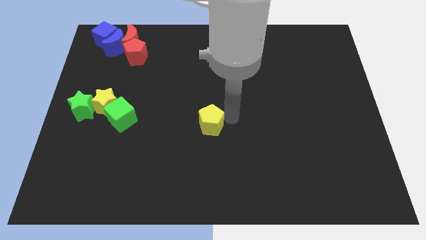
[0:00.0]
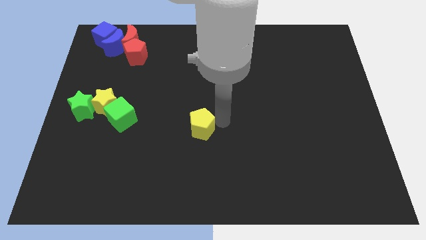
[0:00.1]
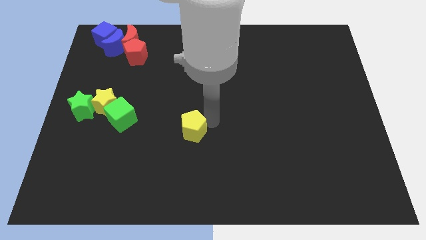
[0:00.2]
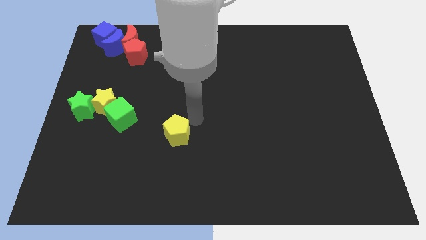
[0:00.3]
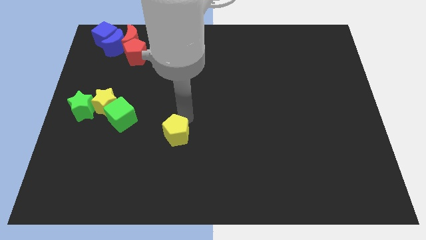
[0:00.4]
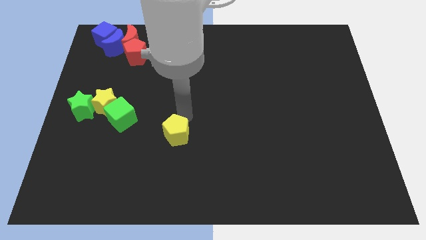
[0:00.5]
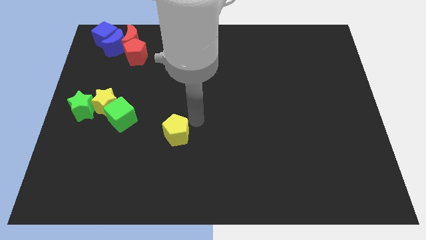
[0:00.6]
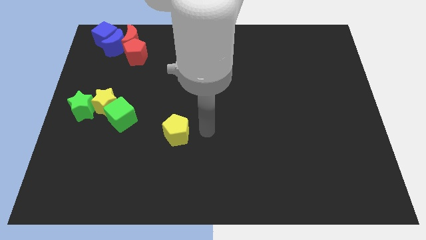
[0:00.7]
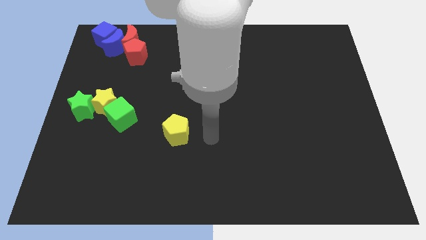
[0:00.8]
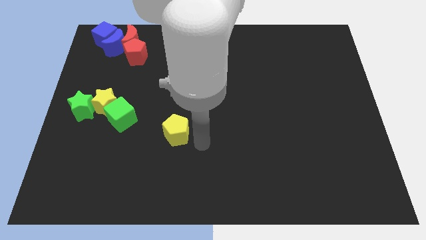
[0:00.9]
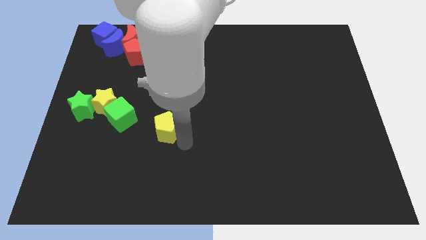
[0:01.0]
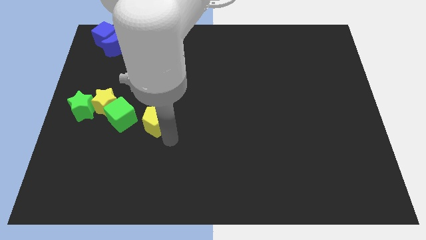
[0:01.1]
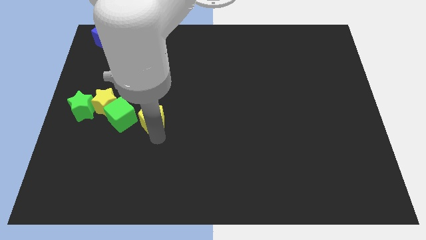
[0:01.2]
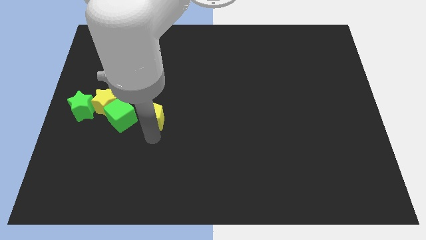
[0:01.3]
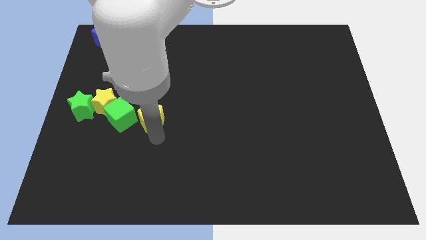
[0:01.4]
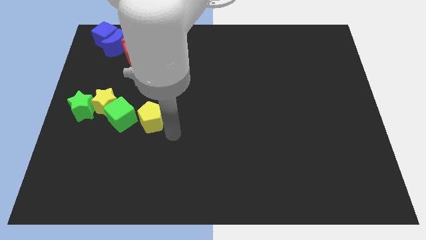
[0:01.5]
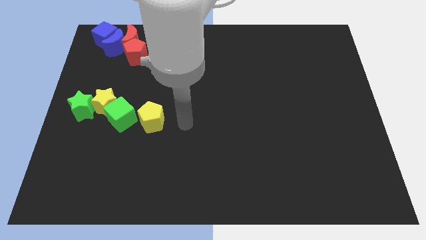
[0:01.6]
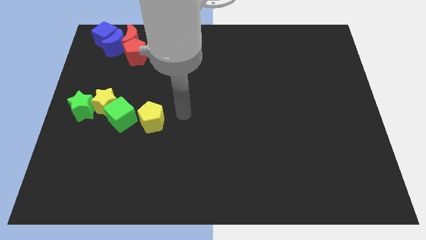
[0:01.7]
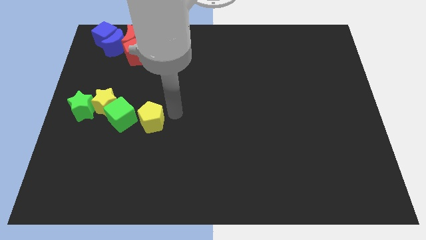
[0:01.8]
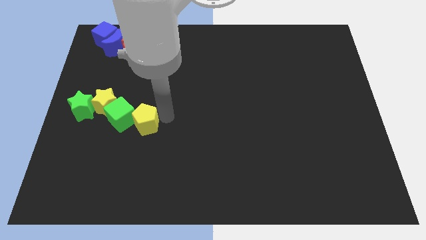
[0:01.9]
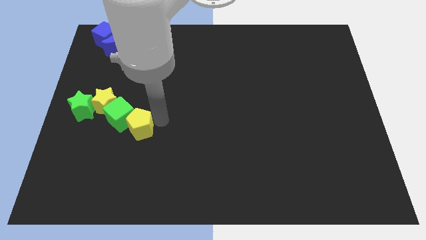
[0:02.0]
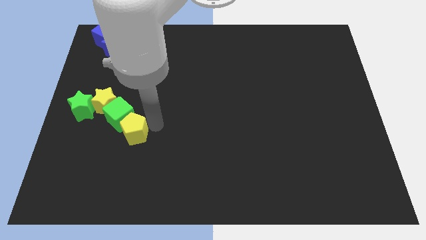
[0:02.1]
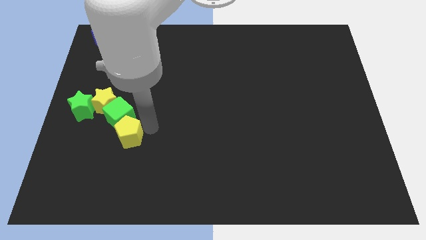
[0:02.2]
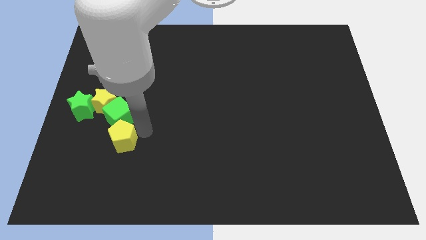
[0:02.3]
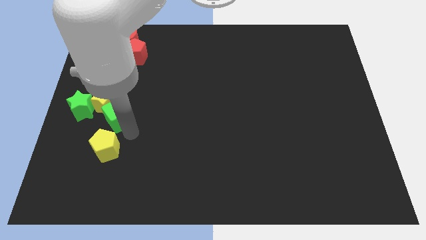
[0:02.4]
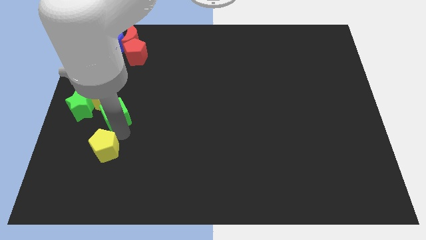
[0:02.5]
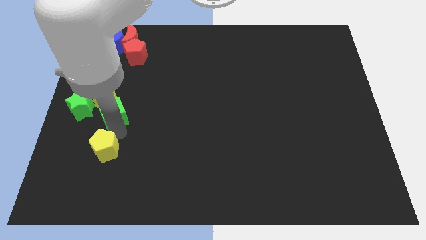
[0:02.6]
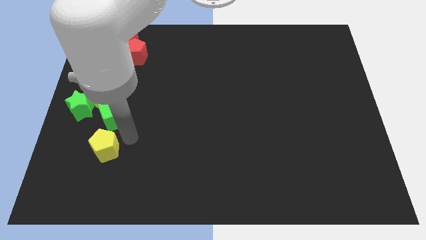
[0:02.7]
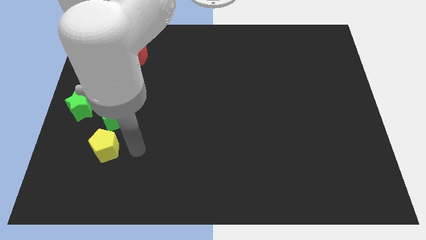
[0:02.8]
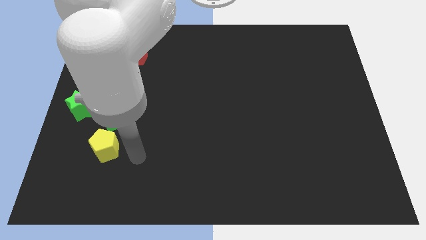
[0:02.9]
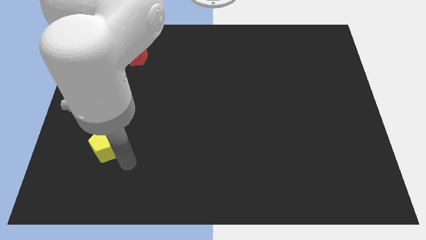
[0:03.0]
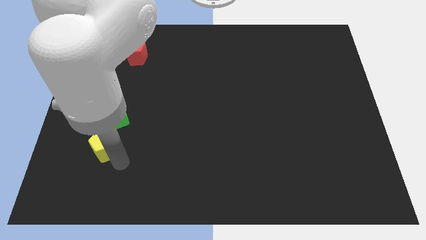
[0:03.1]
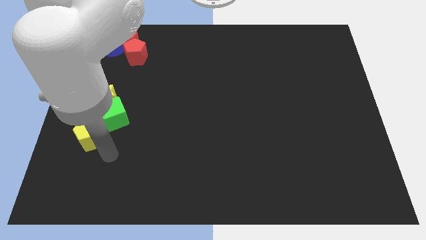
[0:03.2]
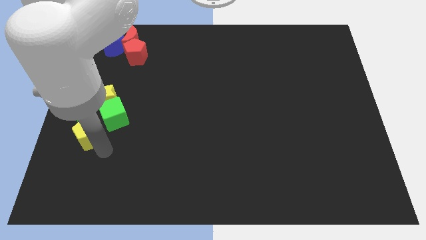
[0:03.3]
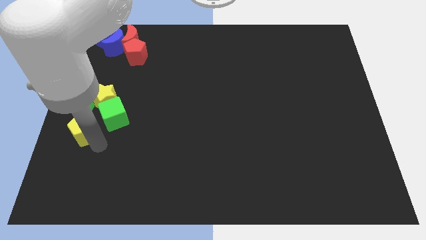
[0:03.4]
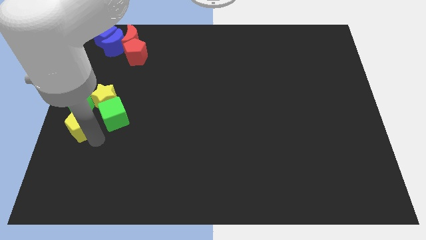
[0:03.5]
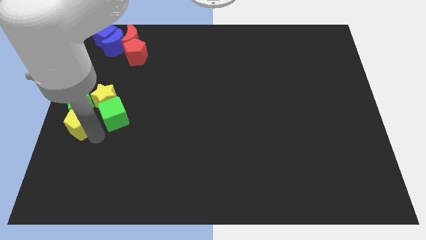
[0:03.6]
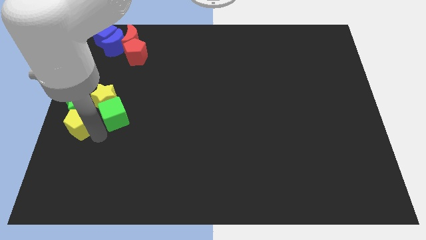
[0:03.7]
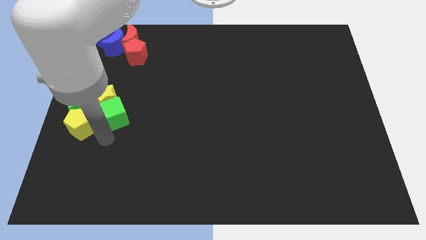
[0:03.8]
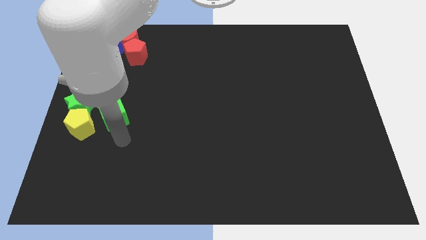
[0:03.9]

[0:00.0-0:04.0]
move the yellow pentagon into the group of blocks

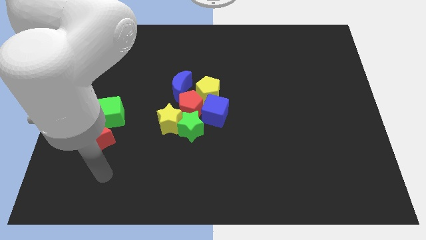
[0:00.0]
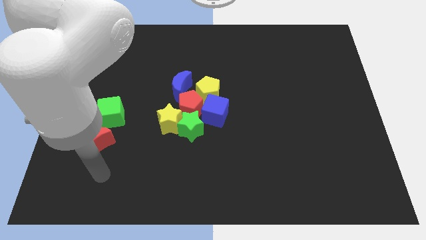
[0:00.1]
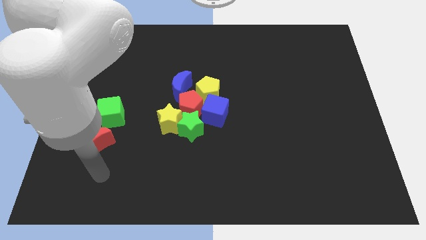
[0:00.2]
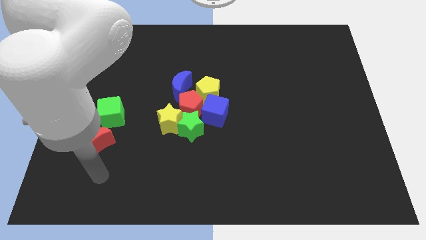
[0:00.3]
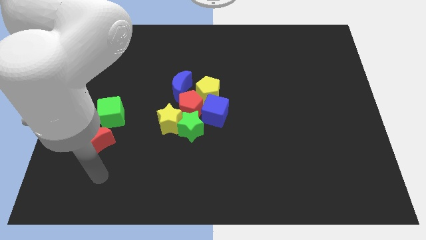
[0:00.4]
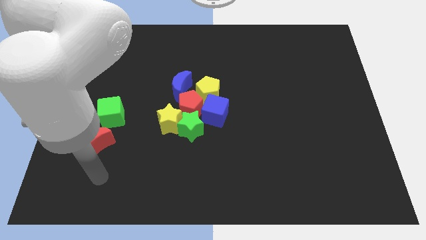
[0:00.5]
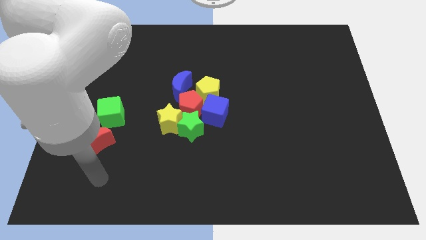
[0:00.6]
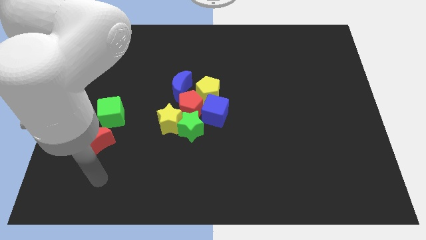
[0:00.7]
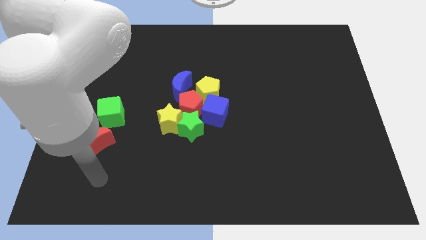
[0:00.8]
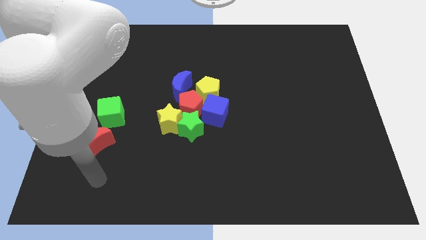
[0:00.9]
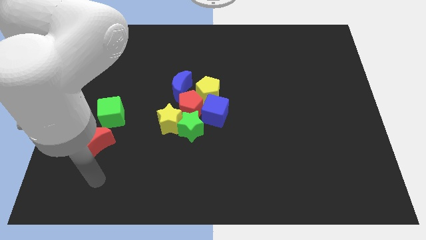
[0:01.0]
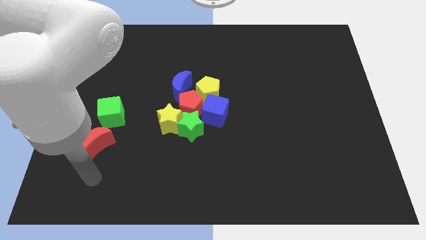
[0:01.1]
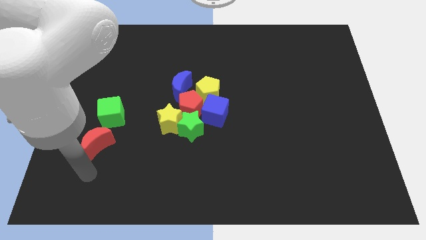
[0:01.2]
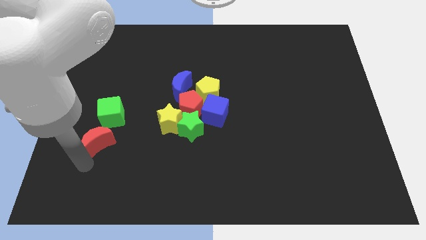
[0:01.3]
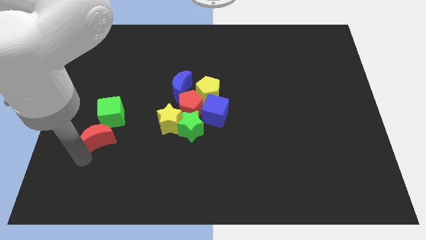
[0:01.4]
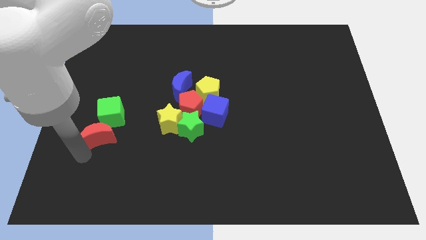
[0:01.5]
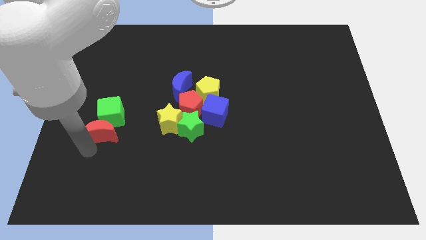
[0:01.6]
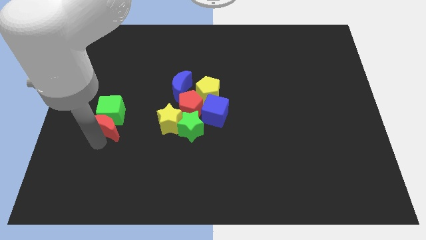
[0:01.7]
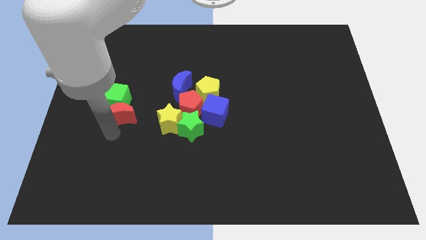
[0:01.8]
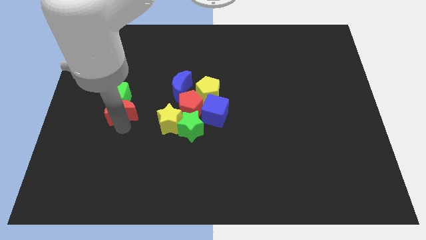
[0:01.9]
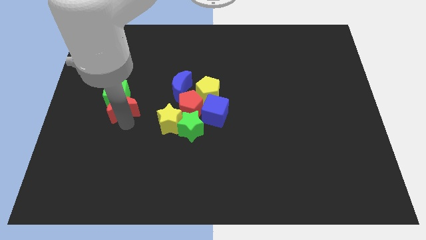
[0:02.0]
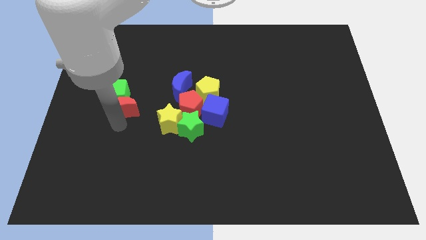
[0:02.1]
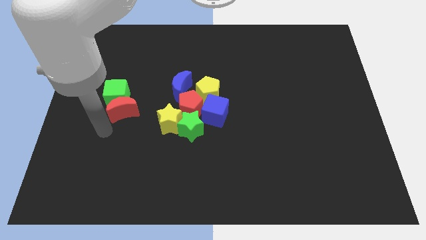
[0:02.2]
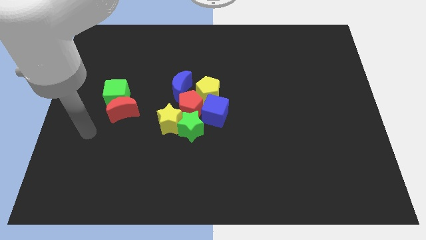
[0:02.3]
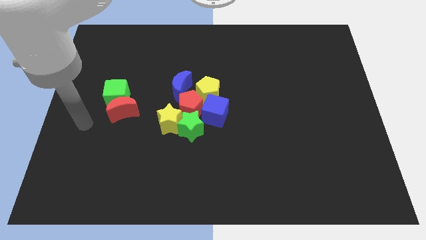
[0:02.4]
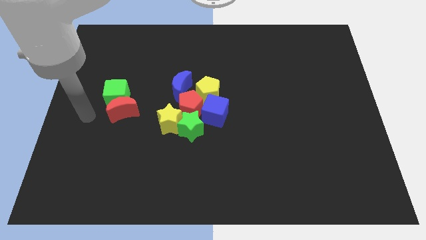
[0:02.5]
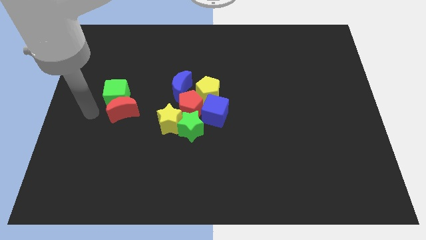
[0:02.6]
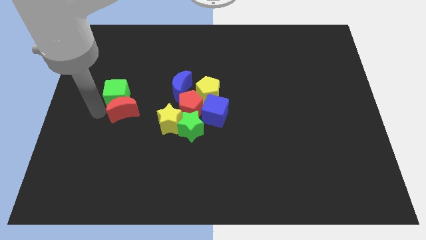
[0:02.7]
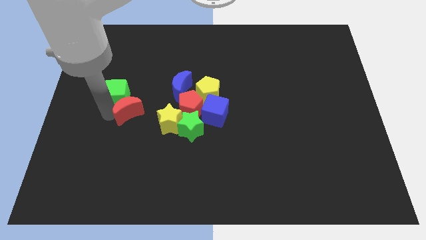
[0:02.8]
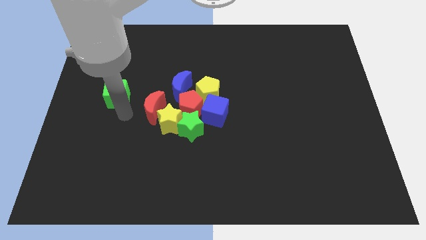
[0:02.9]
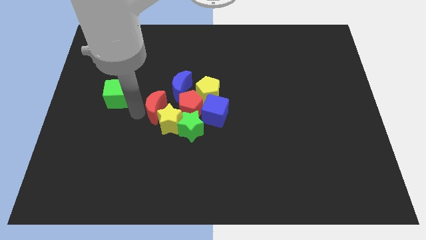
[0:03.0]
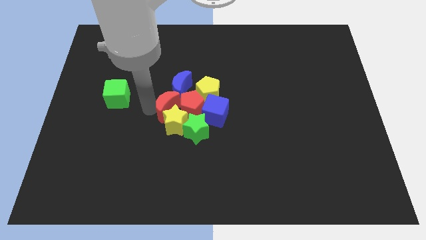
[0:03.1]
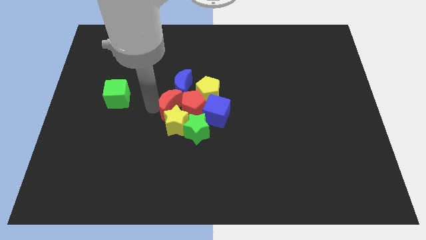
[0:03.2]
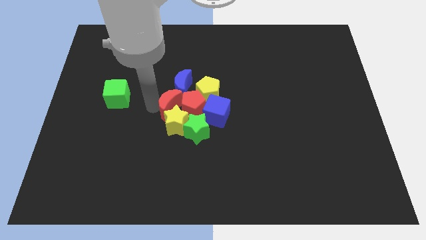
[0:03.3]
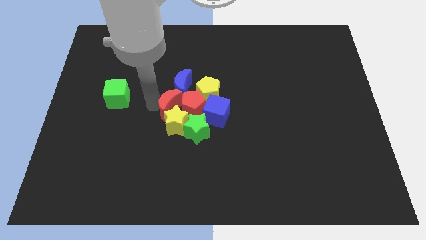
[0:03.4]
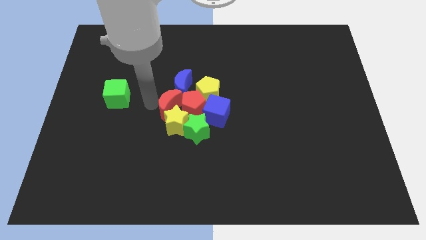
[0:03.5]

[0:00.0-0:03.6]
place the red moon towards the left of the red pentagon

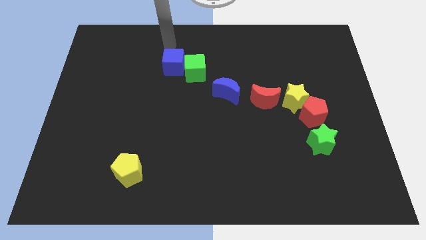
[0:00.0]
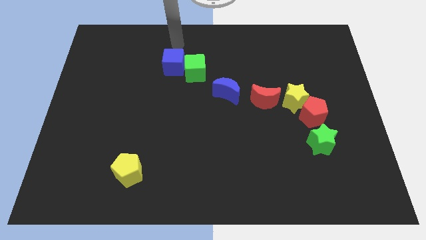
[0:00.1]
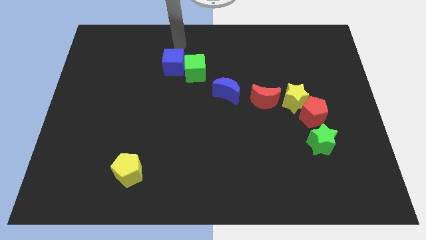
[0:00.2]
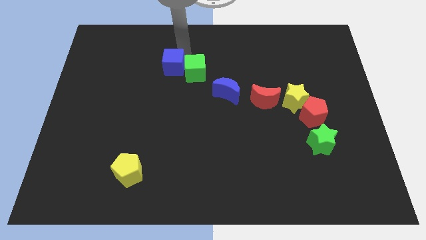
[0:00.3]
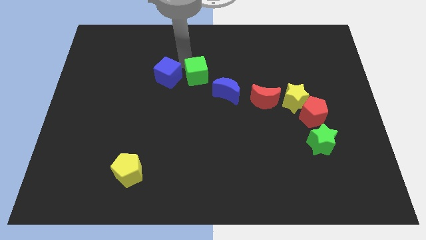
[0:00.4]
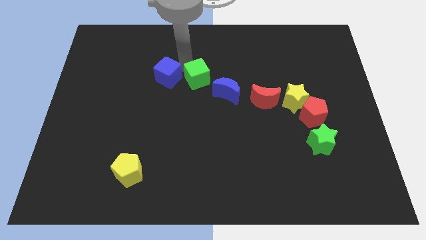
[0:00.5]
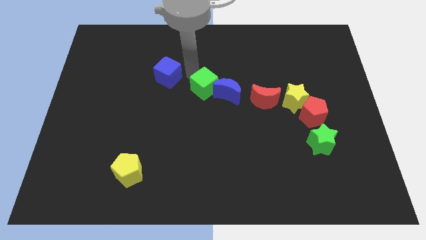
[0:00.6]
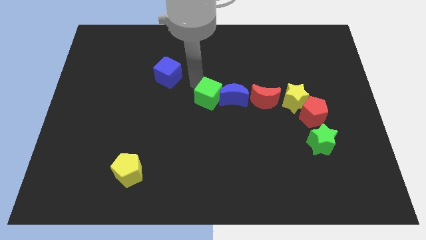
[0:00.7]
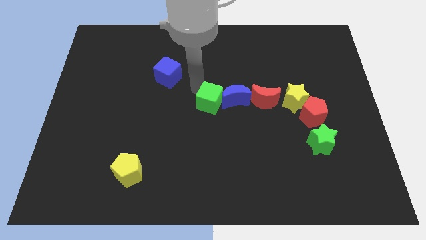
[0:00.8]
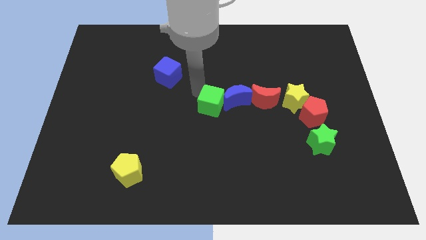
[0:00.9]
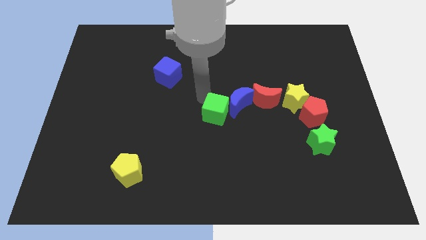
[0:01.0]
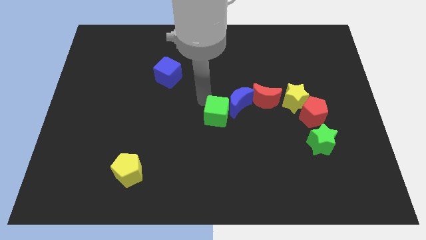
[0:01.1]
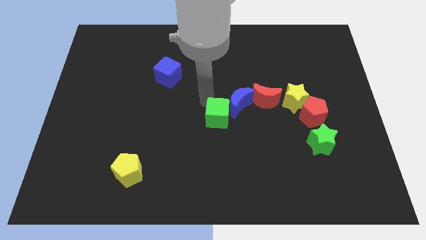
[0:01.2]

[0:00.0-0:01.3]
push the green cube towards the down
